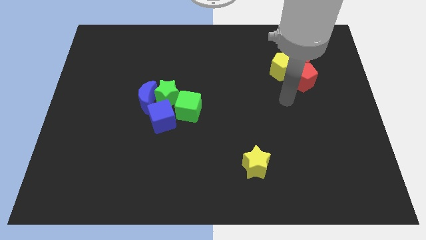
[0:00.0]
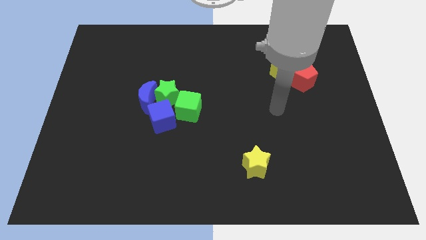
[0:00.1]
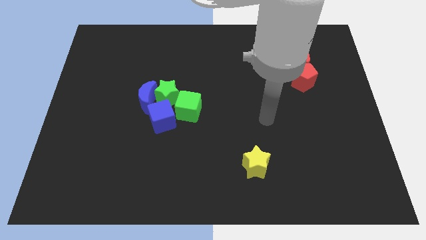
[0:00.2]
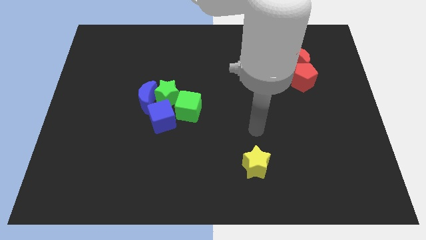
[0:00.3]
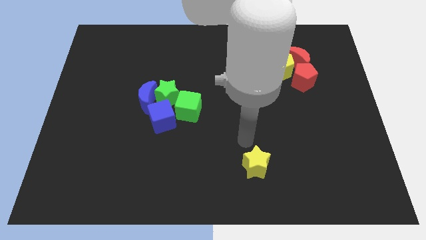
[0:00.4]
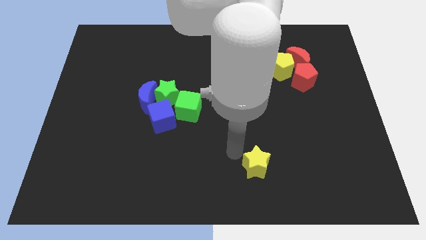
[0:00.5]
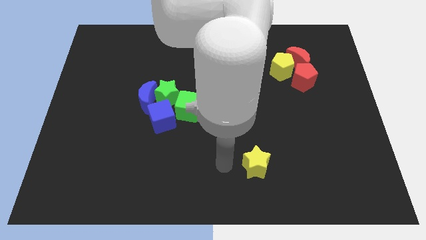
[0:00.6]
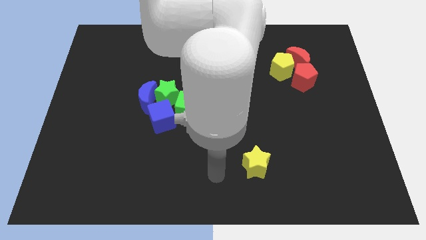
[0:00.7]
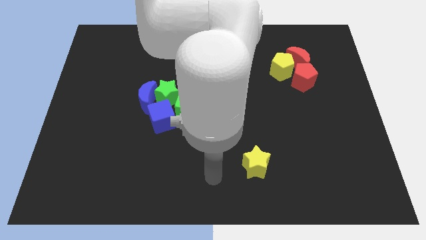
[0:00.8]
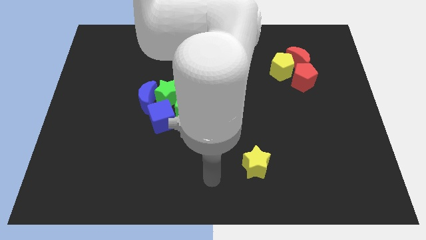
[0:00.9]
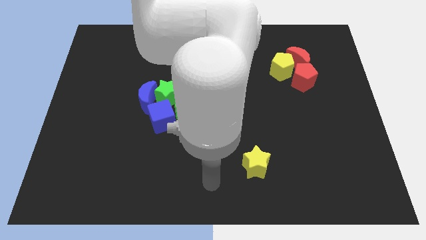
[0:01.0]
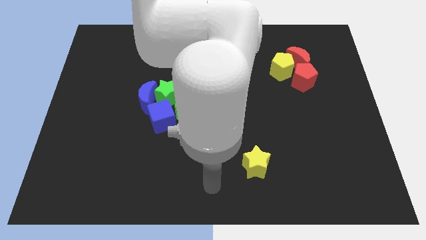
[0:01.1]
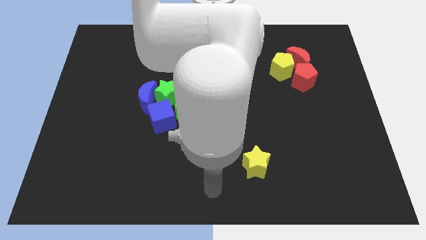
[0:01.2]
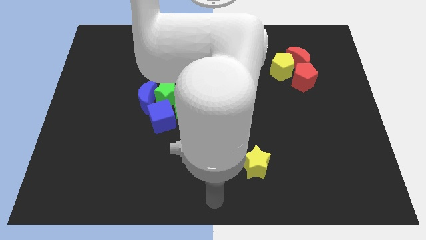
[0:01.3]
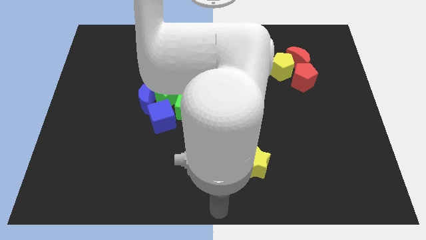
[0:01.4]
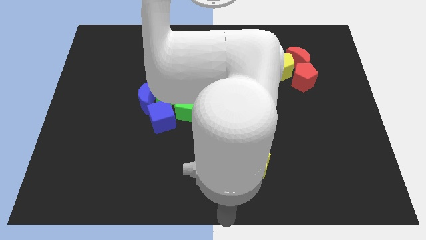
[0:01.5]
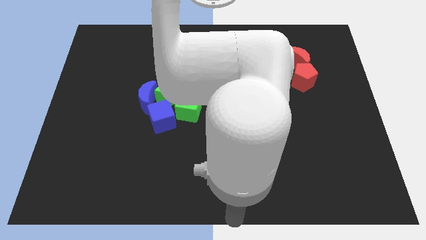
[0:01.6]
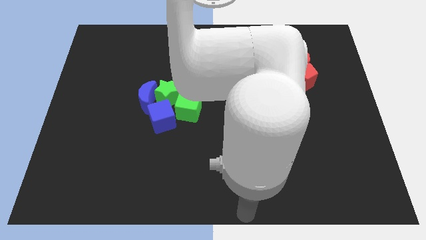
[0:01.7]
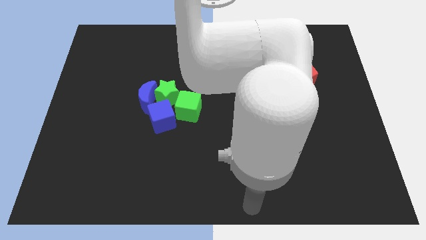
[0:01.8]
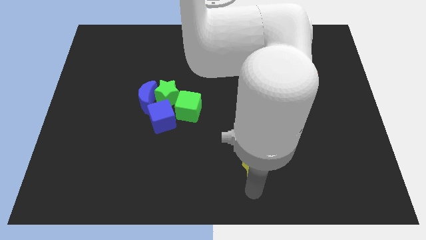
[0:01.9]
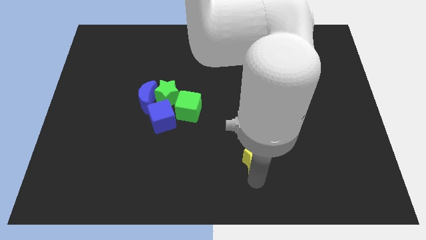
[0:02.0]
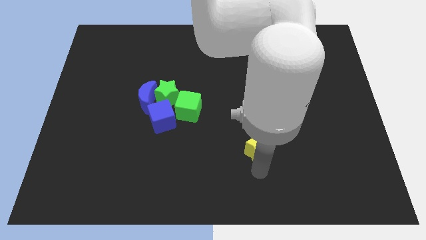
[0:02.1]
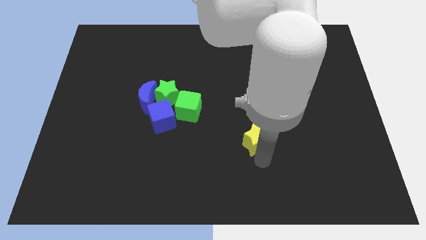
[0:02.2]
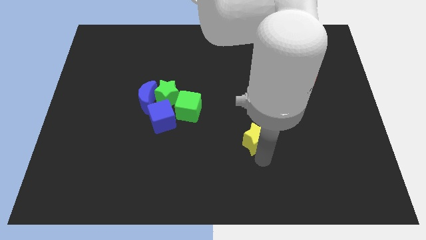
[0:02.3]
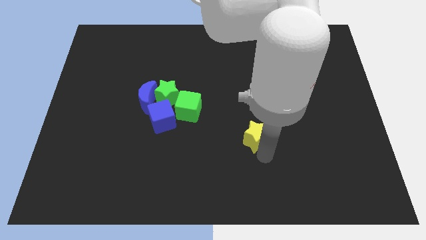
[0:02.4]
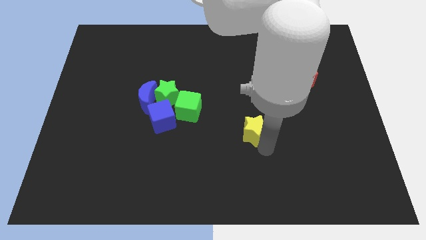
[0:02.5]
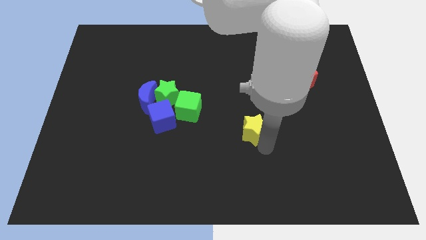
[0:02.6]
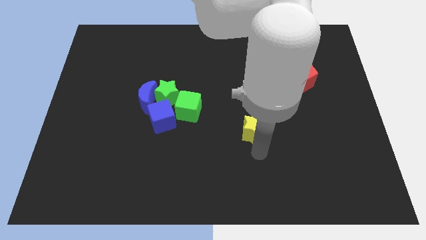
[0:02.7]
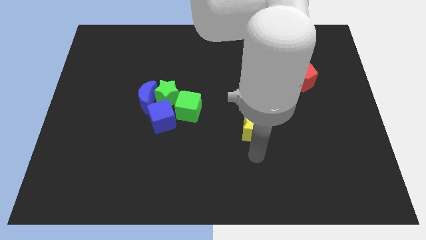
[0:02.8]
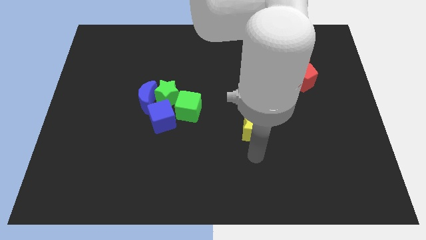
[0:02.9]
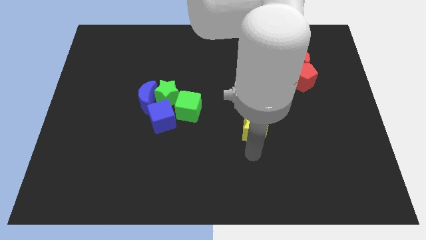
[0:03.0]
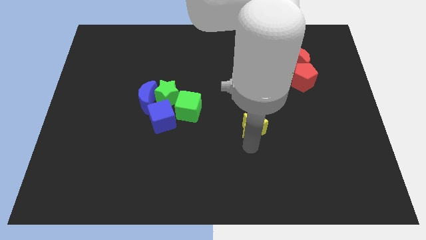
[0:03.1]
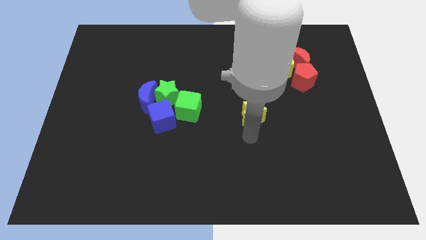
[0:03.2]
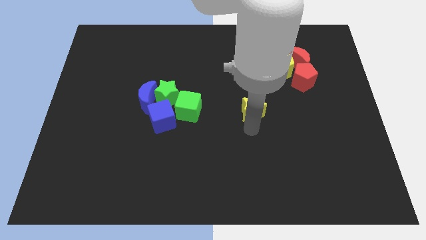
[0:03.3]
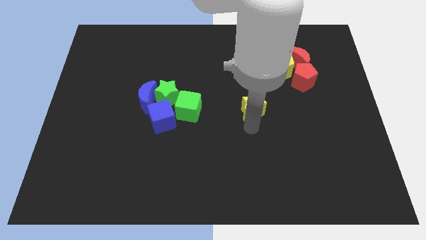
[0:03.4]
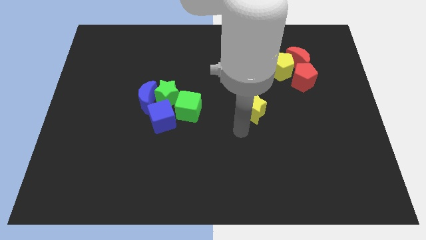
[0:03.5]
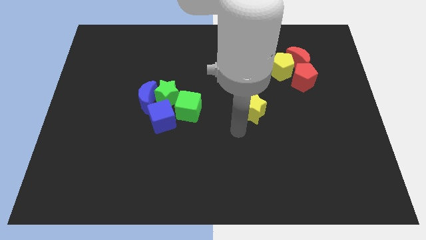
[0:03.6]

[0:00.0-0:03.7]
move the yellow star to the center of the board

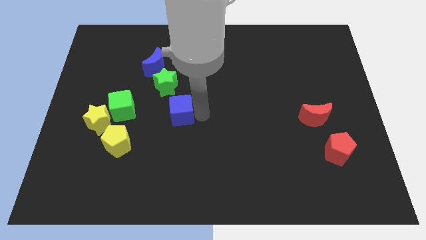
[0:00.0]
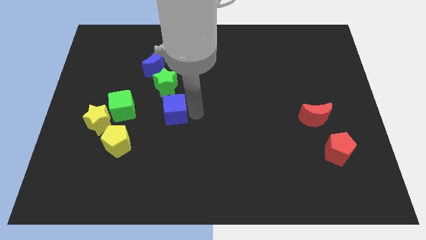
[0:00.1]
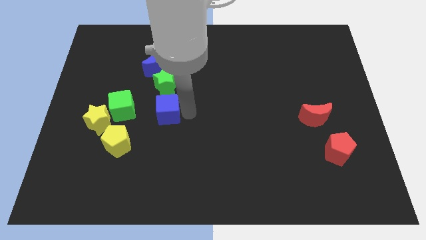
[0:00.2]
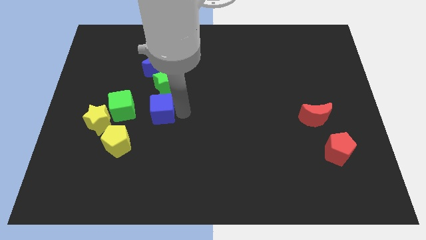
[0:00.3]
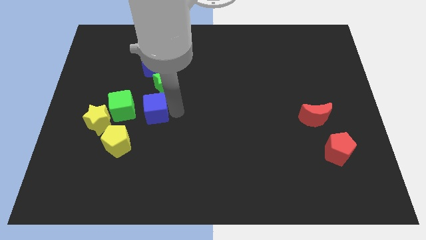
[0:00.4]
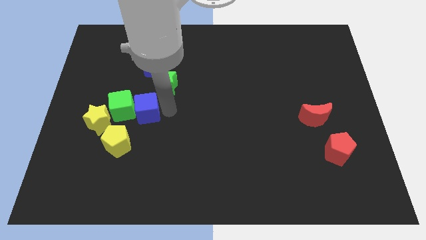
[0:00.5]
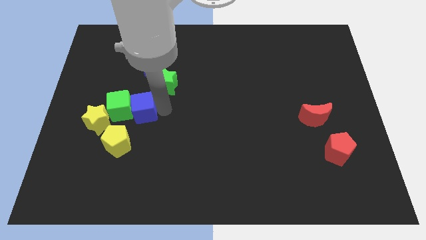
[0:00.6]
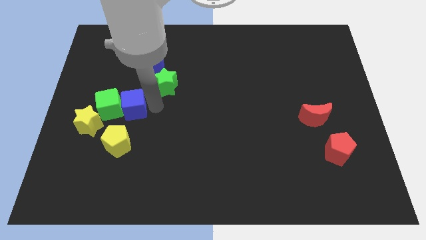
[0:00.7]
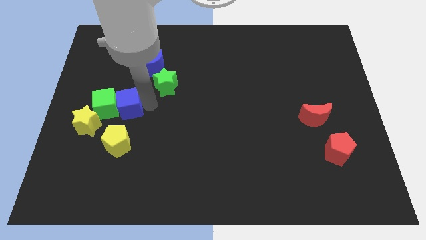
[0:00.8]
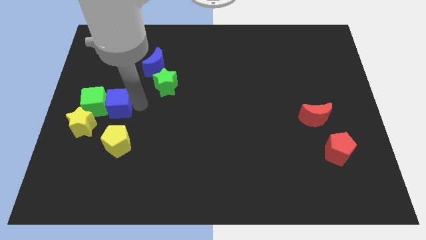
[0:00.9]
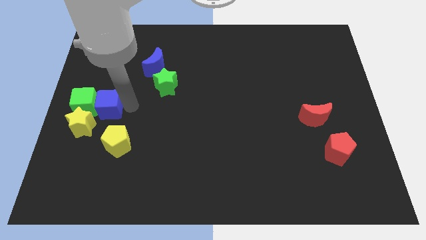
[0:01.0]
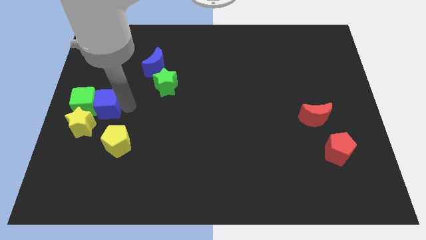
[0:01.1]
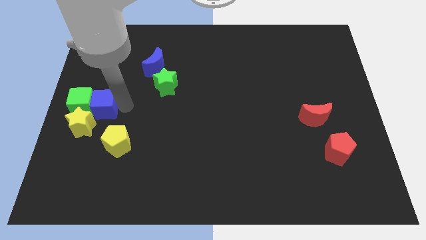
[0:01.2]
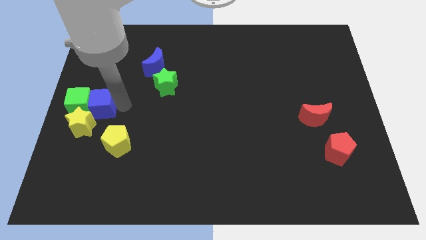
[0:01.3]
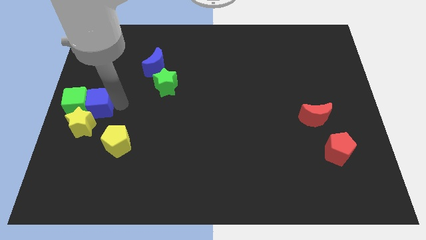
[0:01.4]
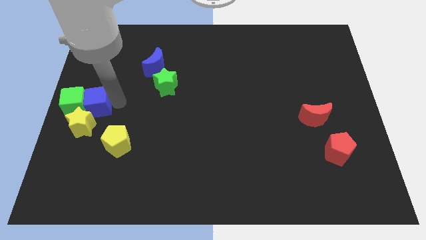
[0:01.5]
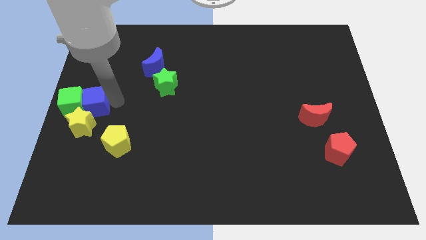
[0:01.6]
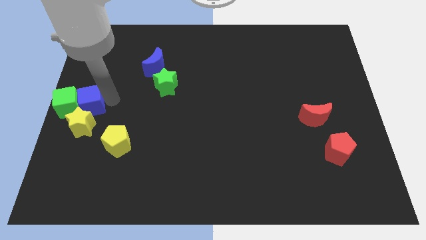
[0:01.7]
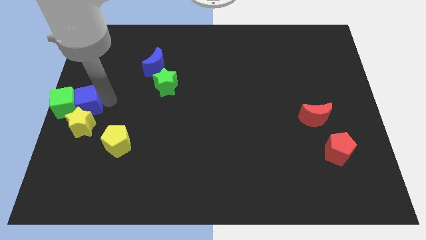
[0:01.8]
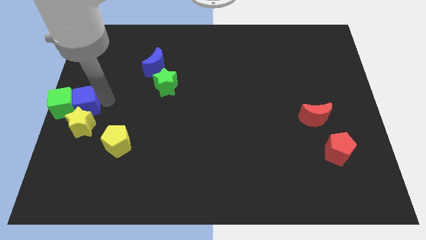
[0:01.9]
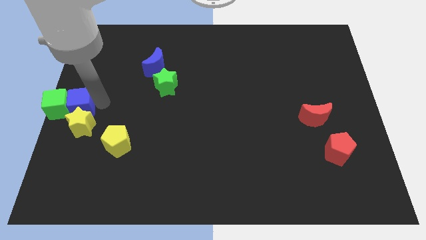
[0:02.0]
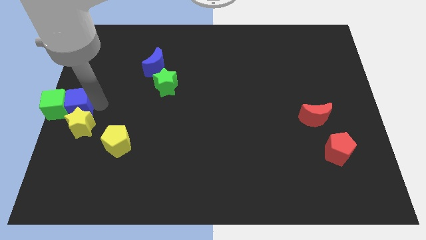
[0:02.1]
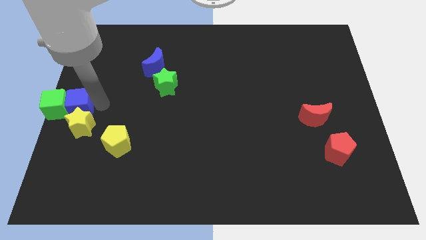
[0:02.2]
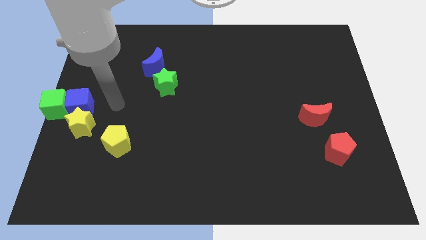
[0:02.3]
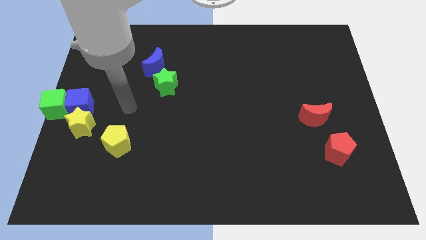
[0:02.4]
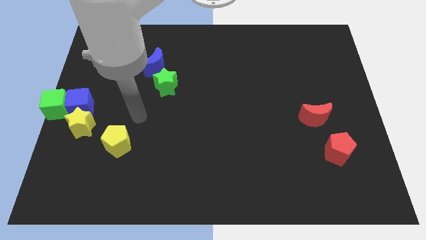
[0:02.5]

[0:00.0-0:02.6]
move the green cube to the center left with blue cube

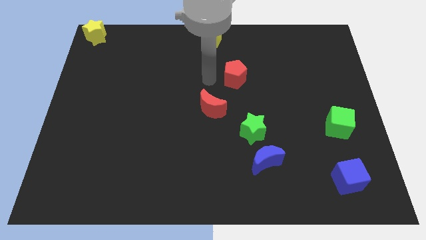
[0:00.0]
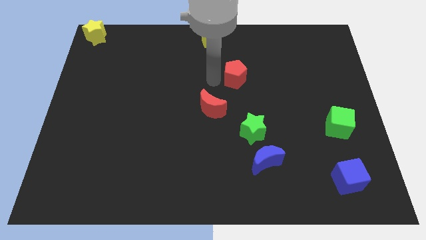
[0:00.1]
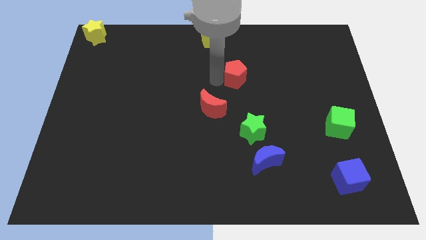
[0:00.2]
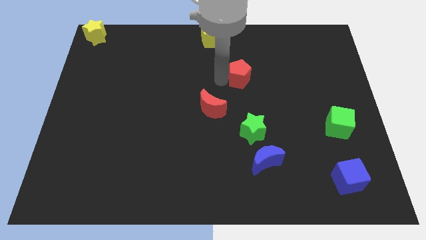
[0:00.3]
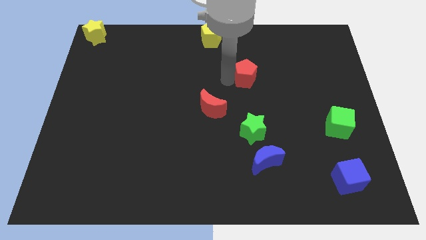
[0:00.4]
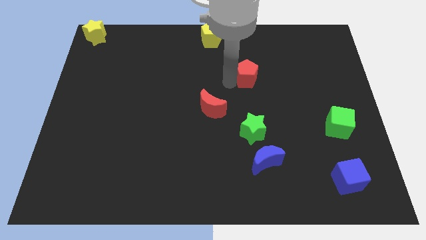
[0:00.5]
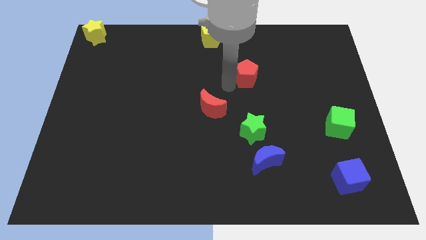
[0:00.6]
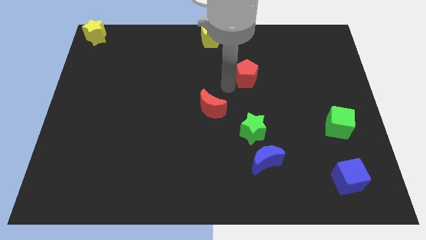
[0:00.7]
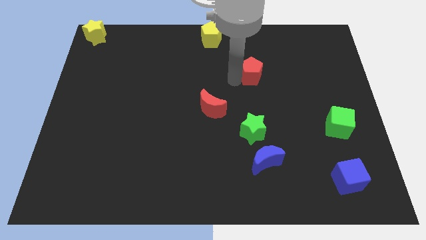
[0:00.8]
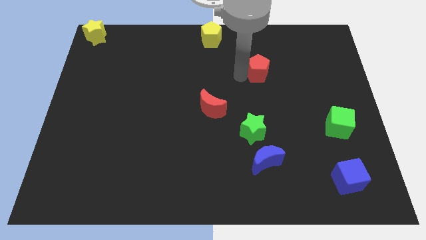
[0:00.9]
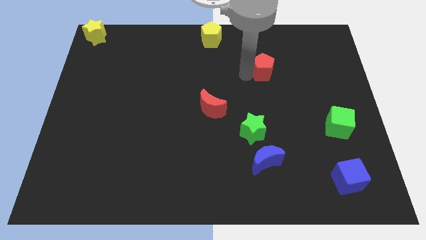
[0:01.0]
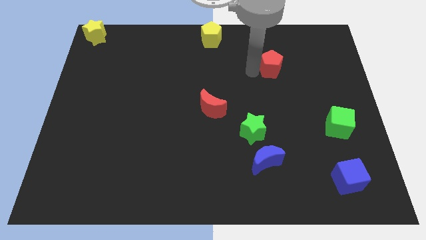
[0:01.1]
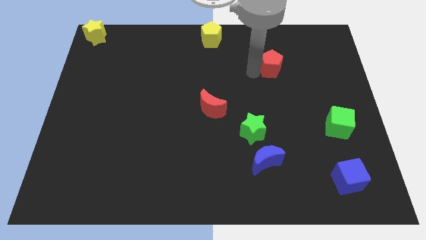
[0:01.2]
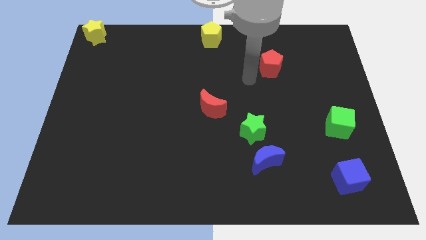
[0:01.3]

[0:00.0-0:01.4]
slightly push the red pentagon towards right of the board

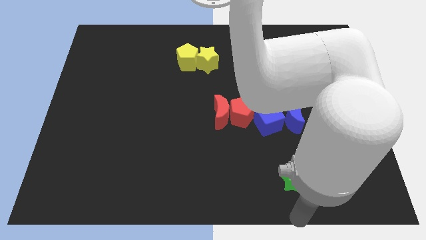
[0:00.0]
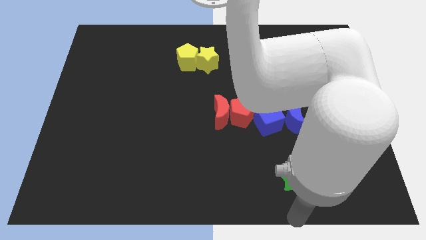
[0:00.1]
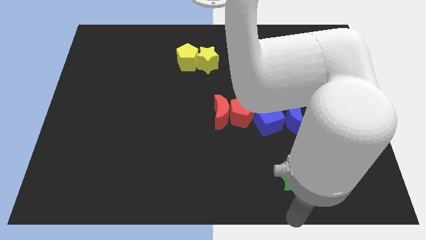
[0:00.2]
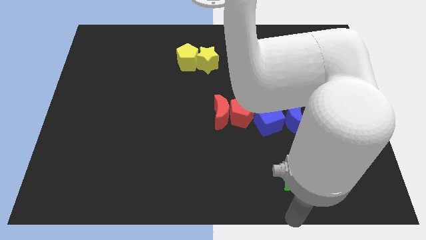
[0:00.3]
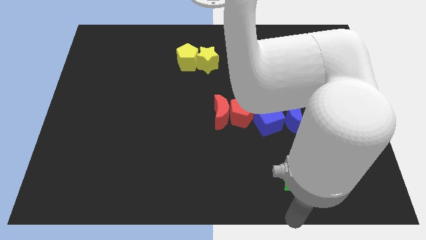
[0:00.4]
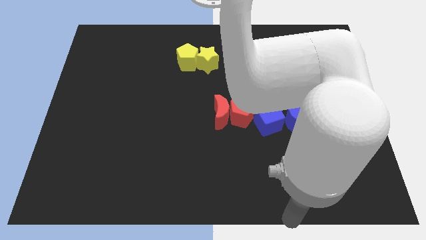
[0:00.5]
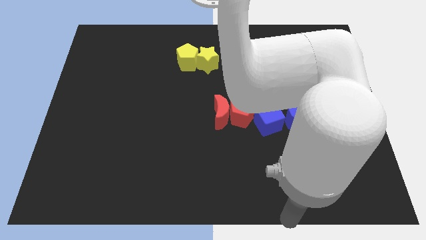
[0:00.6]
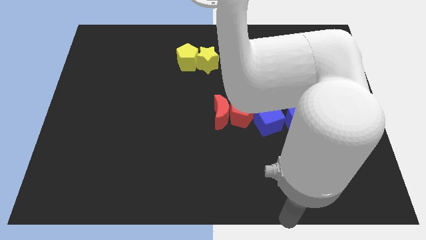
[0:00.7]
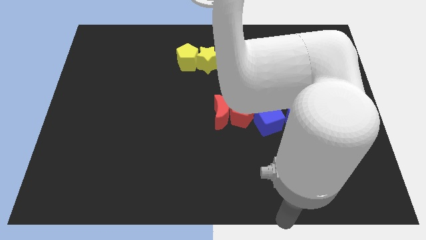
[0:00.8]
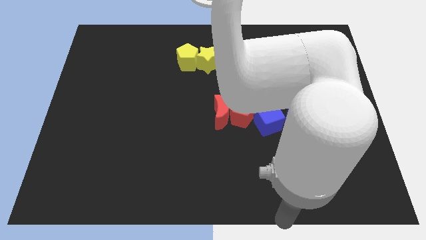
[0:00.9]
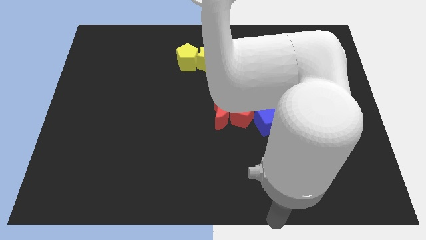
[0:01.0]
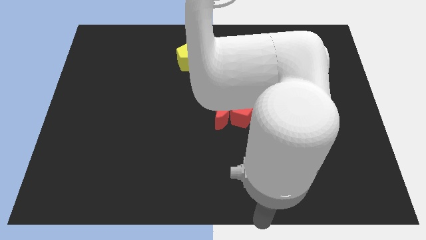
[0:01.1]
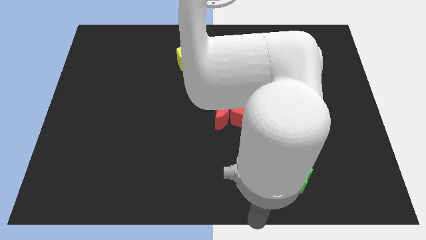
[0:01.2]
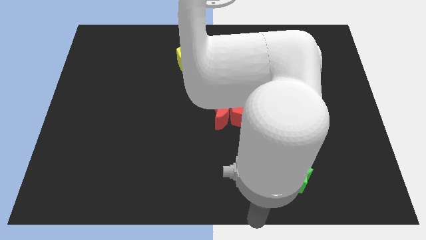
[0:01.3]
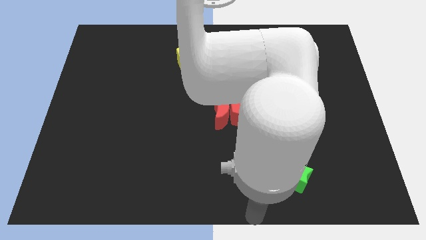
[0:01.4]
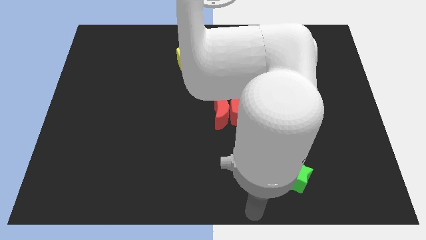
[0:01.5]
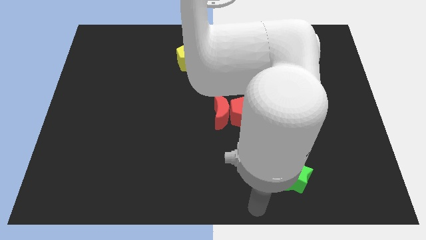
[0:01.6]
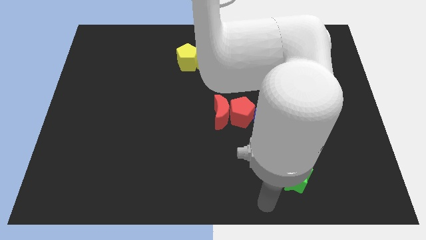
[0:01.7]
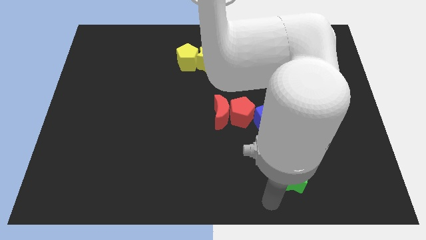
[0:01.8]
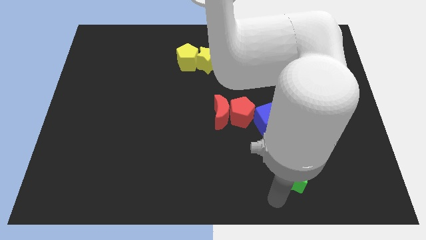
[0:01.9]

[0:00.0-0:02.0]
point your arm towards the bottom left side of the green star
